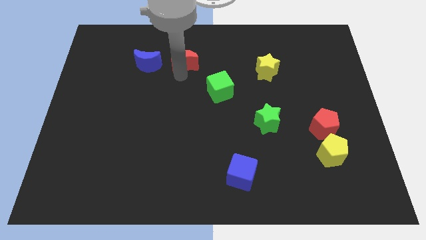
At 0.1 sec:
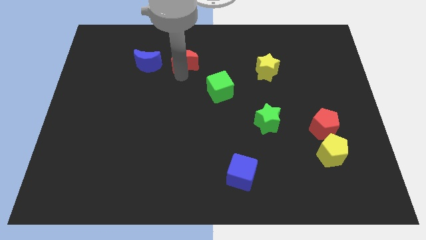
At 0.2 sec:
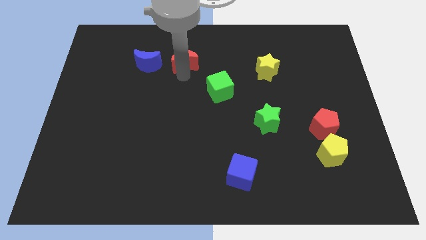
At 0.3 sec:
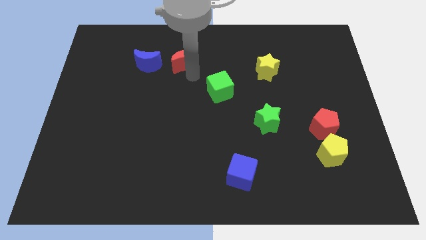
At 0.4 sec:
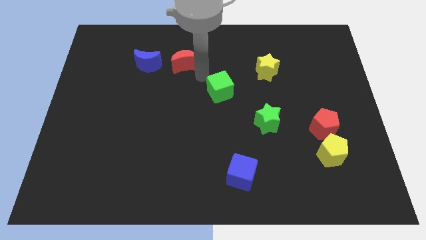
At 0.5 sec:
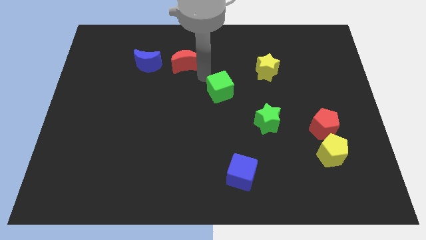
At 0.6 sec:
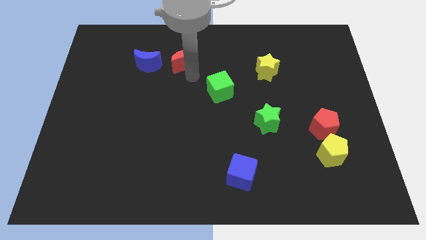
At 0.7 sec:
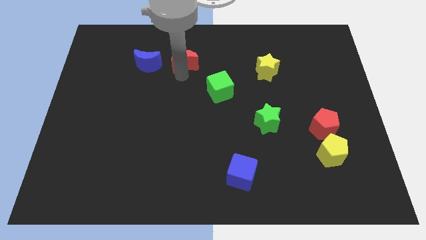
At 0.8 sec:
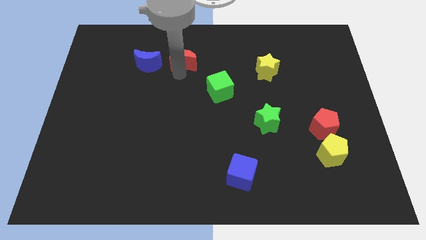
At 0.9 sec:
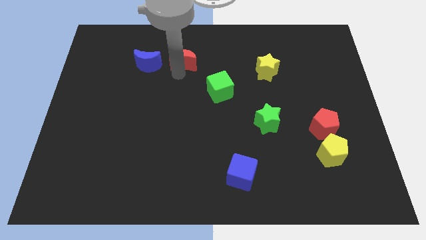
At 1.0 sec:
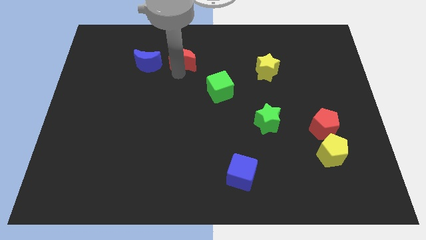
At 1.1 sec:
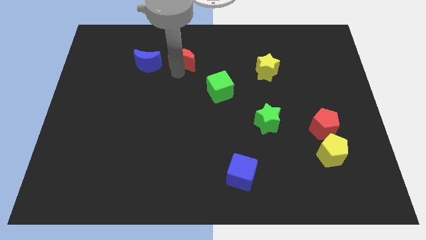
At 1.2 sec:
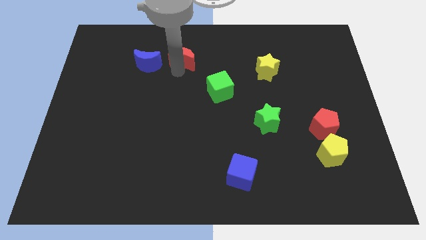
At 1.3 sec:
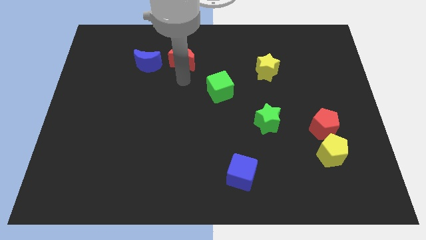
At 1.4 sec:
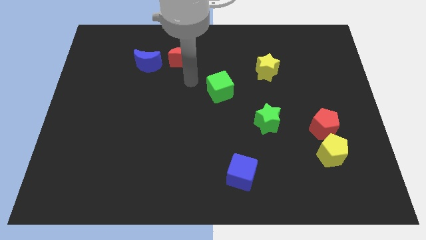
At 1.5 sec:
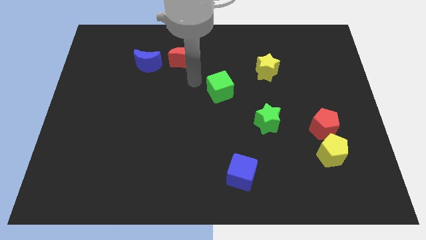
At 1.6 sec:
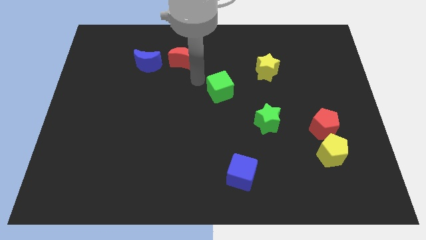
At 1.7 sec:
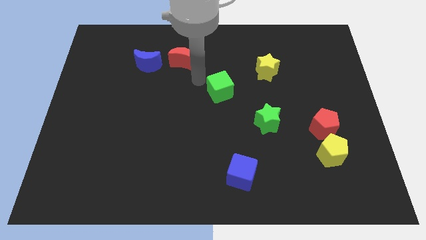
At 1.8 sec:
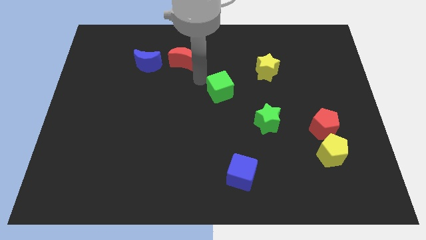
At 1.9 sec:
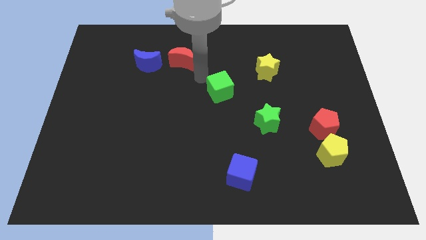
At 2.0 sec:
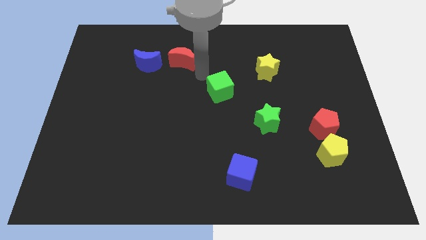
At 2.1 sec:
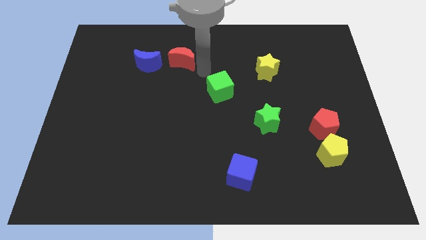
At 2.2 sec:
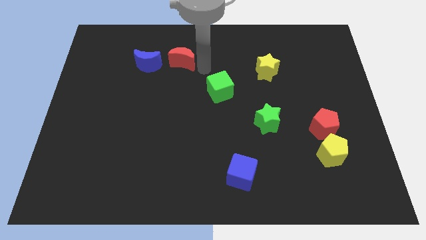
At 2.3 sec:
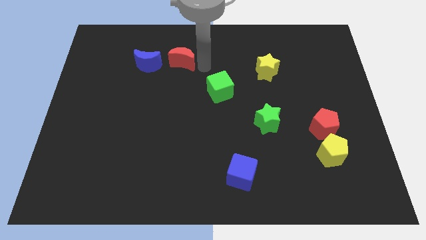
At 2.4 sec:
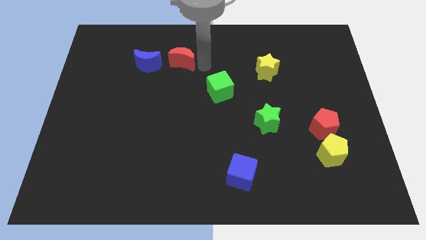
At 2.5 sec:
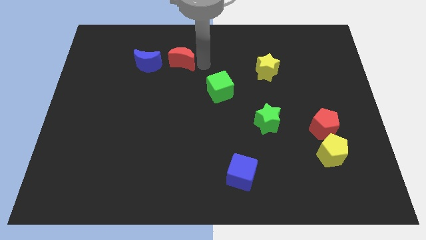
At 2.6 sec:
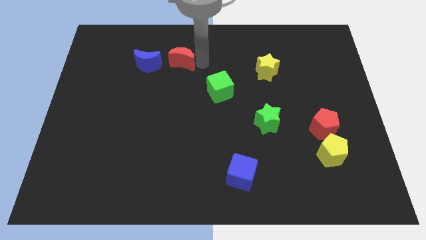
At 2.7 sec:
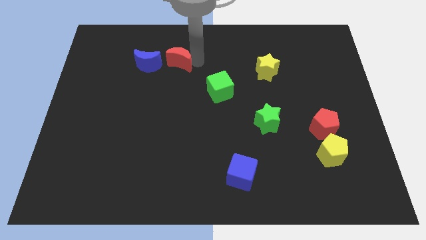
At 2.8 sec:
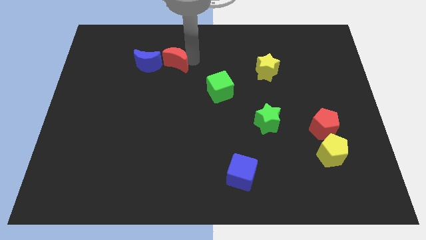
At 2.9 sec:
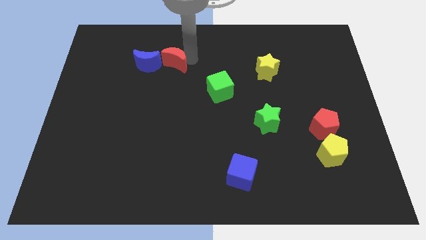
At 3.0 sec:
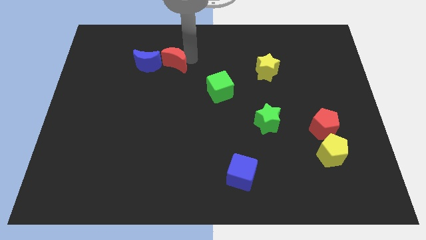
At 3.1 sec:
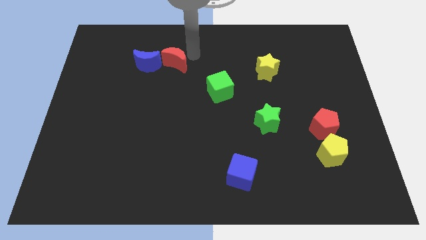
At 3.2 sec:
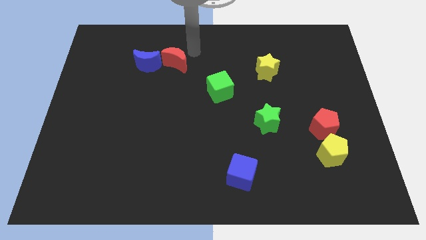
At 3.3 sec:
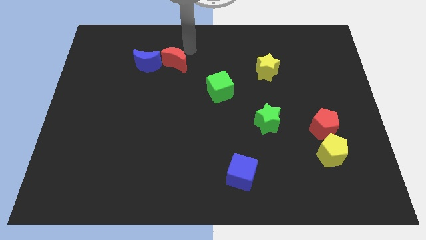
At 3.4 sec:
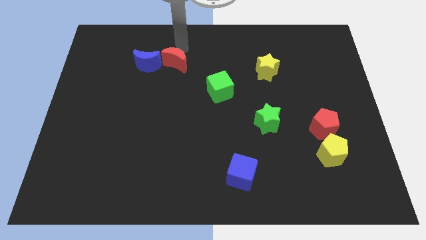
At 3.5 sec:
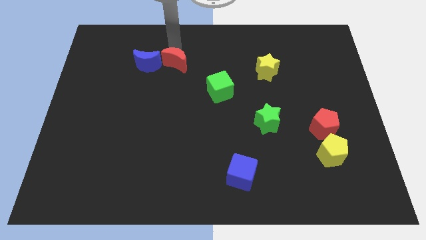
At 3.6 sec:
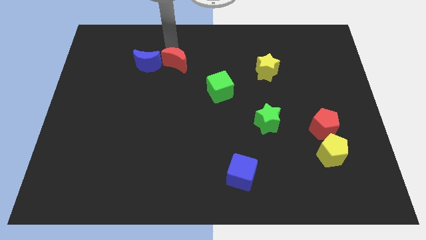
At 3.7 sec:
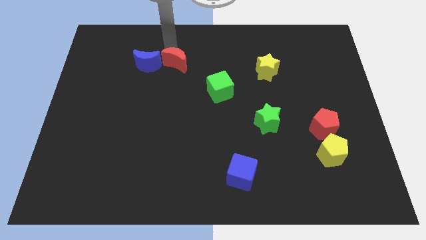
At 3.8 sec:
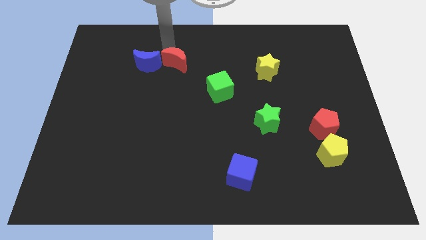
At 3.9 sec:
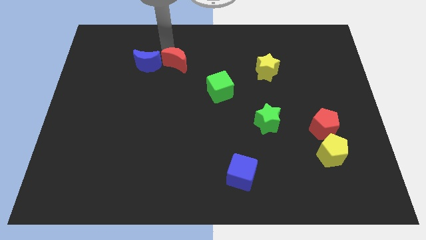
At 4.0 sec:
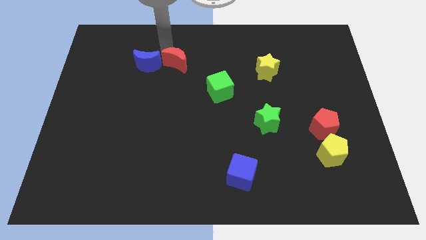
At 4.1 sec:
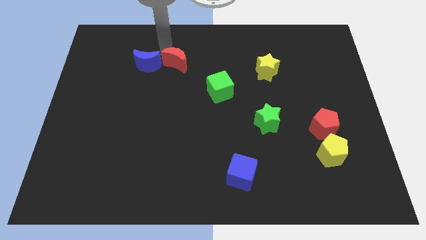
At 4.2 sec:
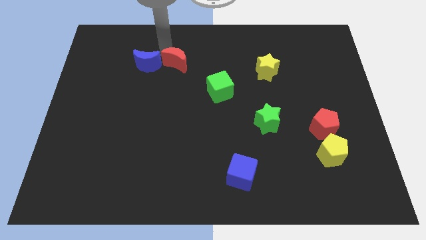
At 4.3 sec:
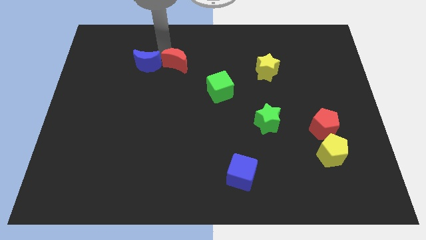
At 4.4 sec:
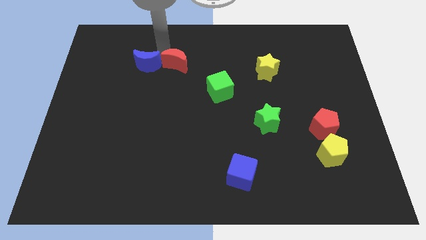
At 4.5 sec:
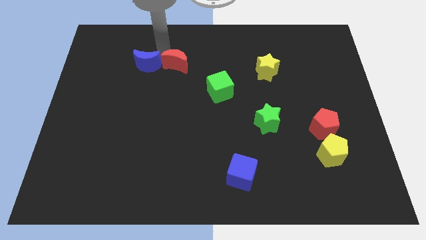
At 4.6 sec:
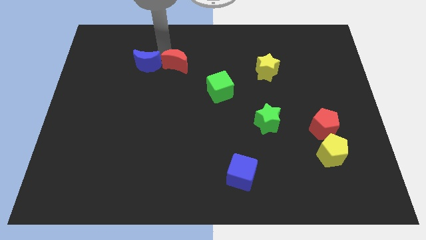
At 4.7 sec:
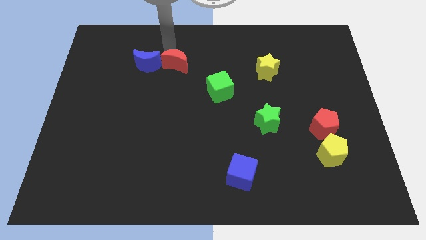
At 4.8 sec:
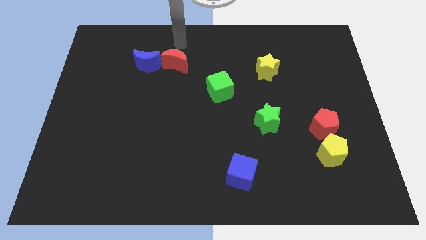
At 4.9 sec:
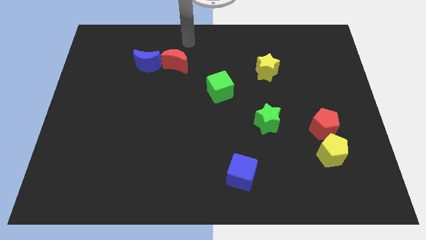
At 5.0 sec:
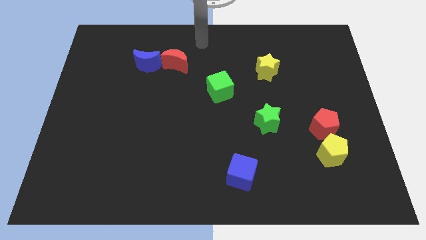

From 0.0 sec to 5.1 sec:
move the red crescent to the right of the blue crescent

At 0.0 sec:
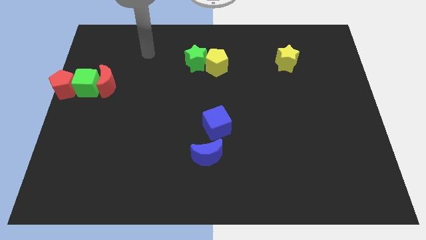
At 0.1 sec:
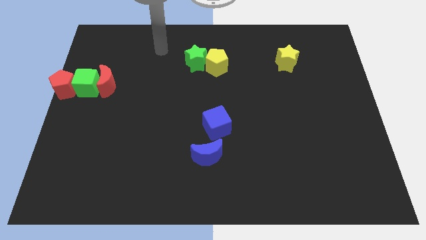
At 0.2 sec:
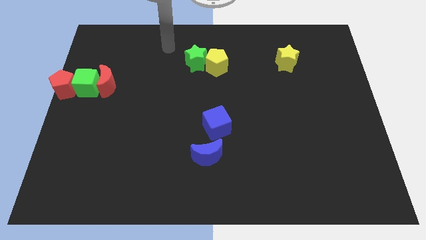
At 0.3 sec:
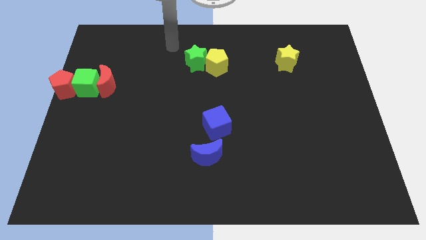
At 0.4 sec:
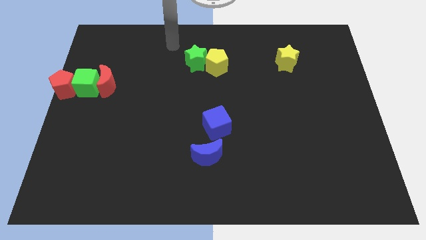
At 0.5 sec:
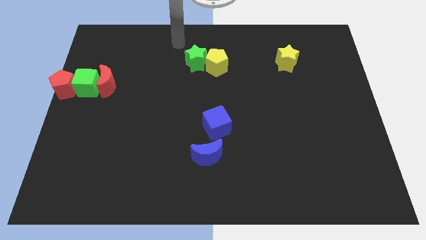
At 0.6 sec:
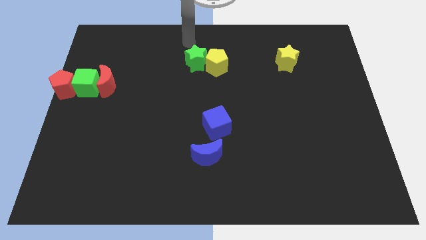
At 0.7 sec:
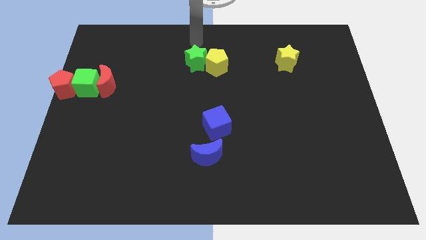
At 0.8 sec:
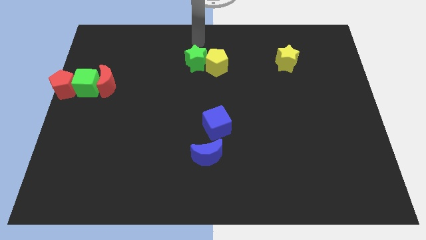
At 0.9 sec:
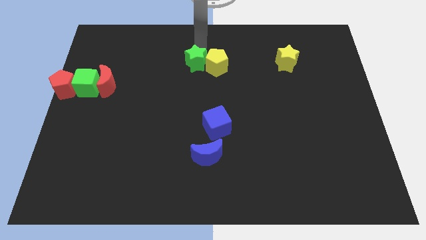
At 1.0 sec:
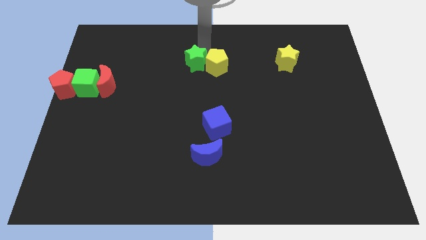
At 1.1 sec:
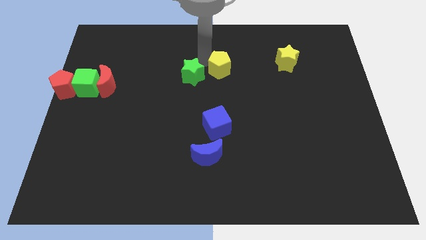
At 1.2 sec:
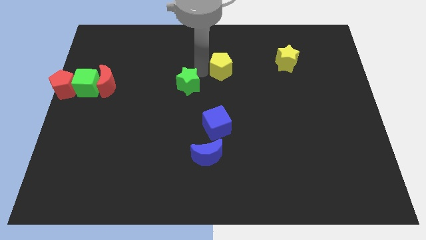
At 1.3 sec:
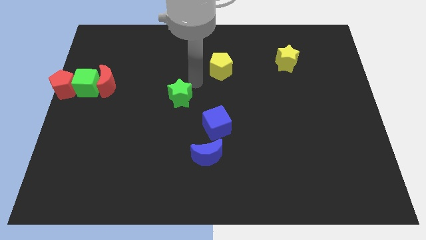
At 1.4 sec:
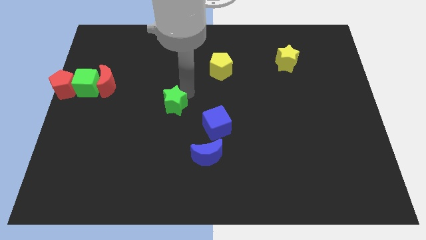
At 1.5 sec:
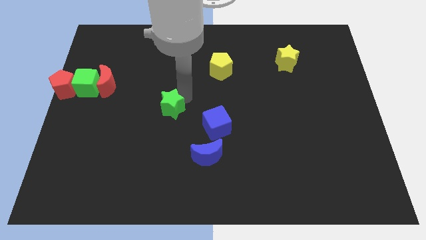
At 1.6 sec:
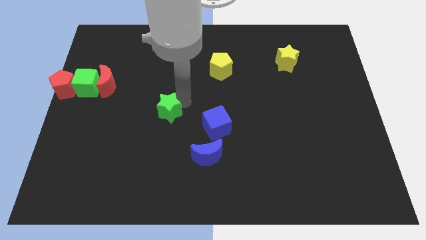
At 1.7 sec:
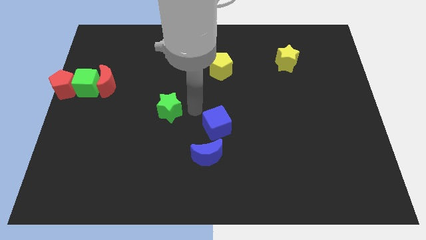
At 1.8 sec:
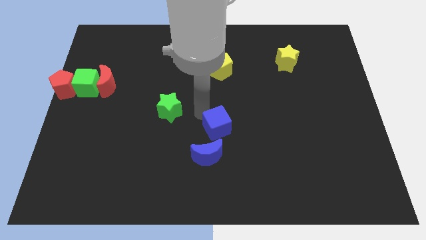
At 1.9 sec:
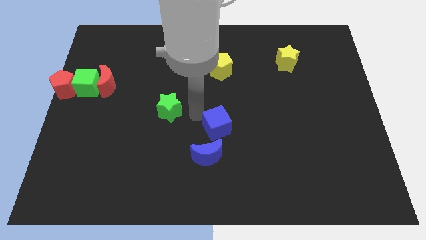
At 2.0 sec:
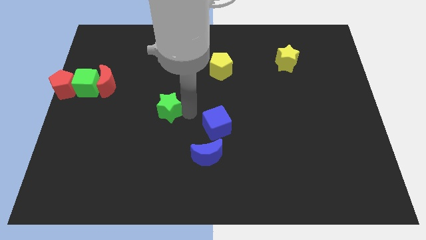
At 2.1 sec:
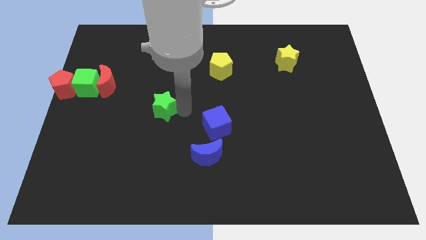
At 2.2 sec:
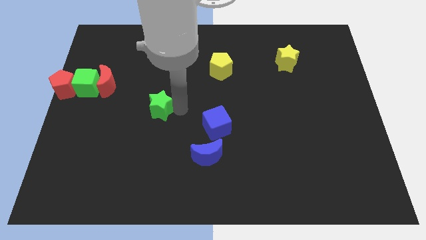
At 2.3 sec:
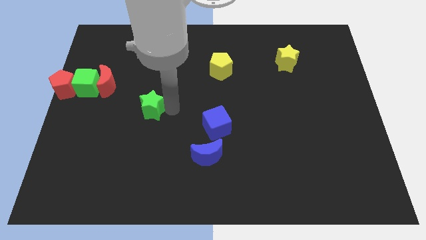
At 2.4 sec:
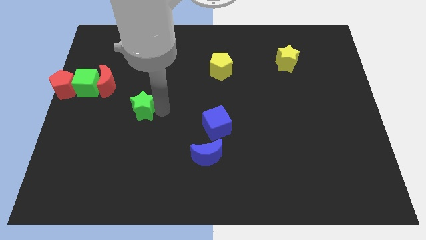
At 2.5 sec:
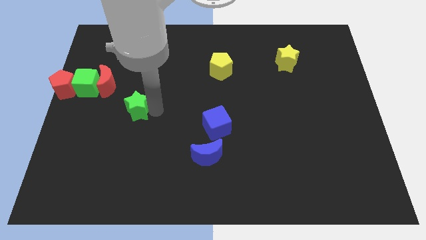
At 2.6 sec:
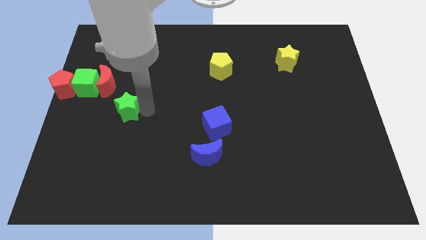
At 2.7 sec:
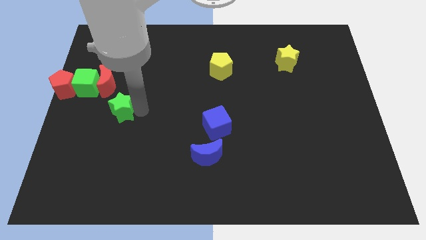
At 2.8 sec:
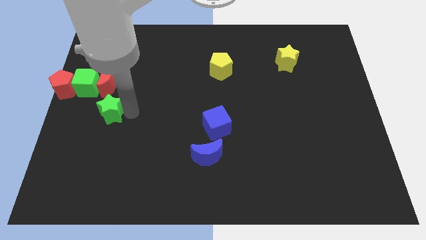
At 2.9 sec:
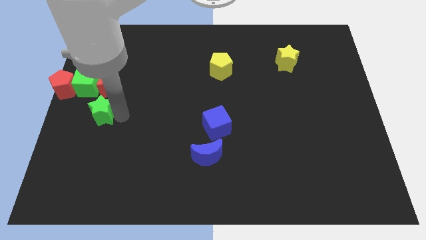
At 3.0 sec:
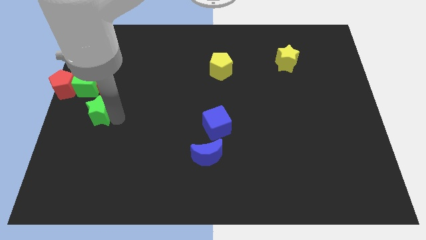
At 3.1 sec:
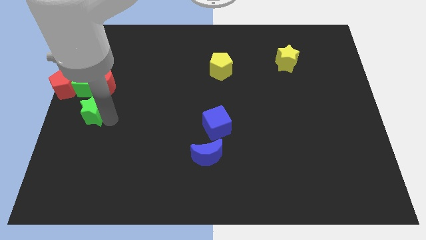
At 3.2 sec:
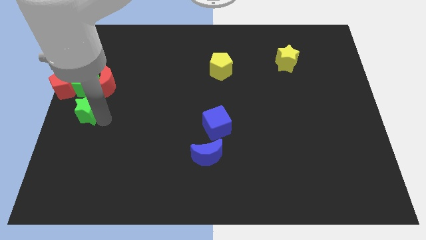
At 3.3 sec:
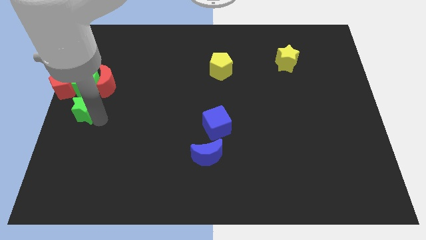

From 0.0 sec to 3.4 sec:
separate the green star from the yellow pentagon

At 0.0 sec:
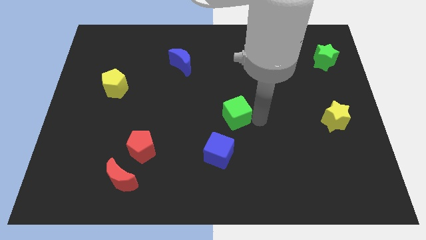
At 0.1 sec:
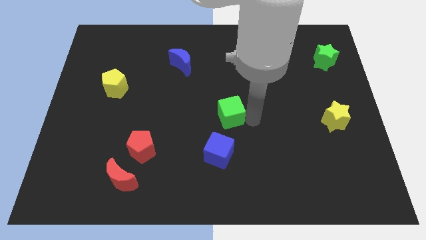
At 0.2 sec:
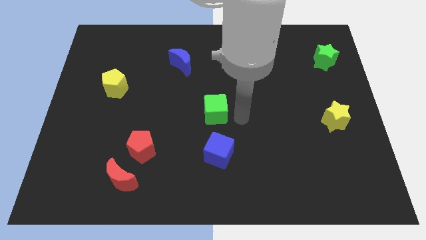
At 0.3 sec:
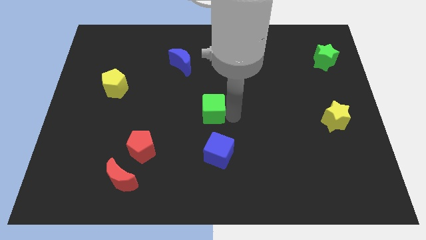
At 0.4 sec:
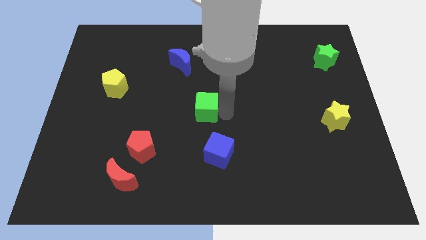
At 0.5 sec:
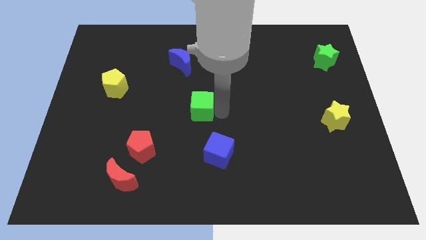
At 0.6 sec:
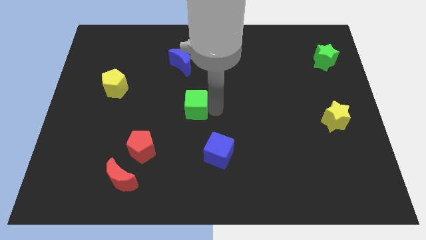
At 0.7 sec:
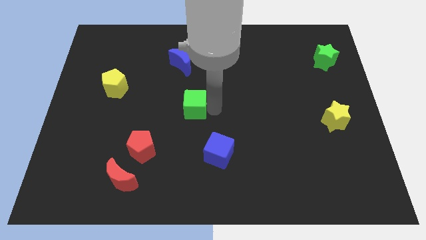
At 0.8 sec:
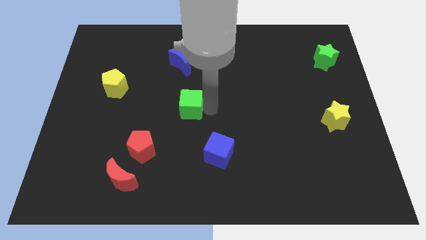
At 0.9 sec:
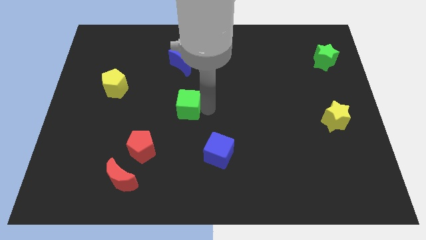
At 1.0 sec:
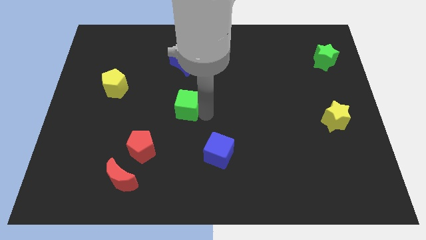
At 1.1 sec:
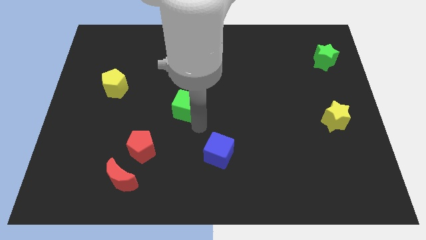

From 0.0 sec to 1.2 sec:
move the green cube down to the blue moon
